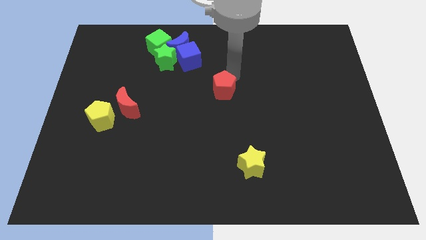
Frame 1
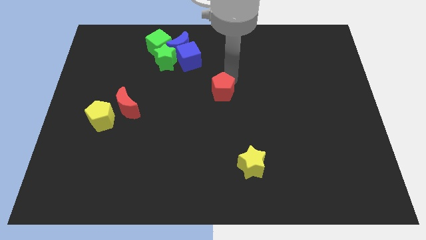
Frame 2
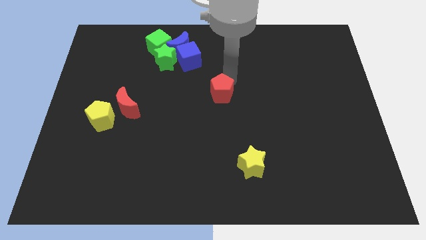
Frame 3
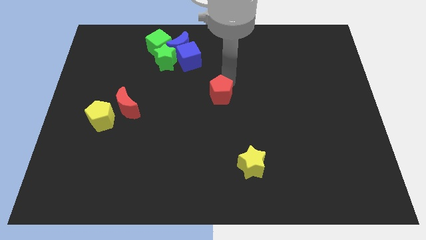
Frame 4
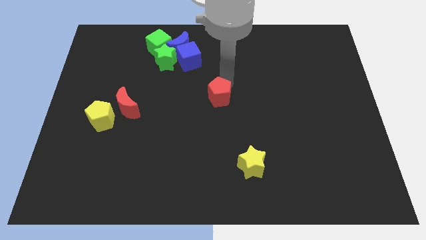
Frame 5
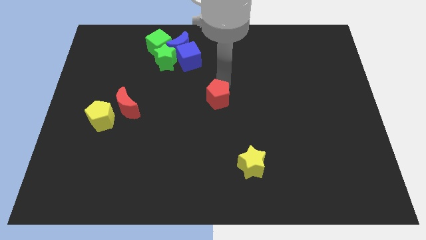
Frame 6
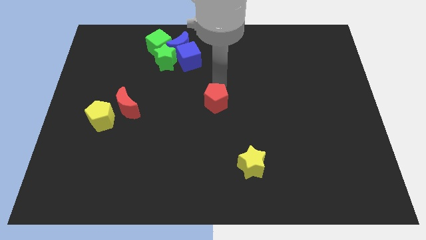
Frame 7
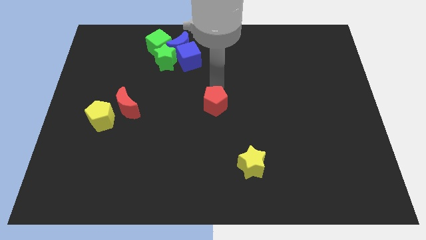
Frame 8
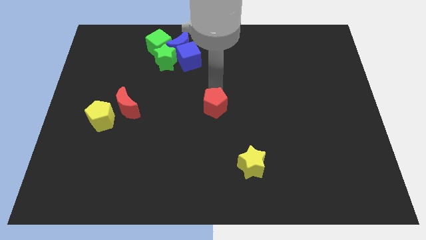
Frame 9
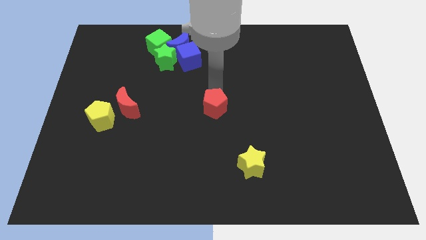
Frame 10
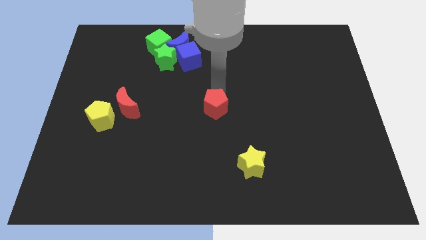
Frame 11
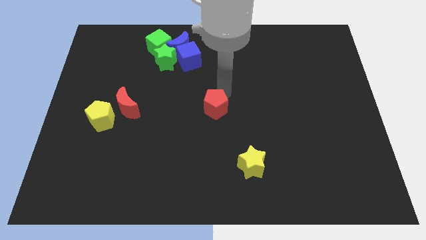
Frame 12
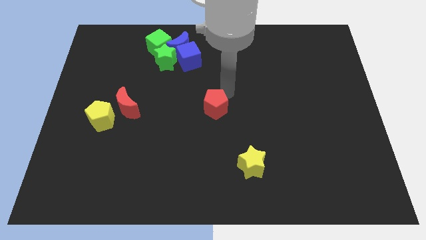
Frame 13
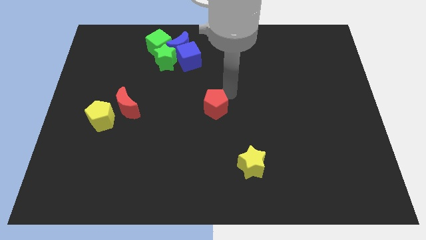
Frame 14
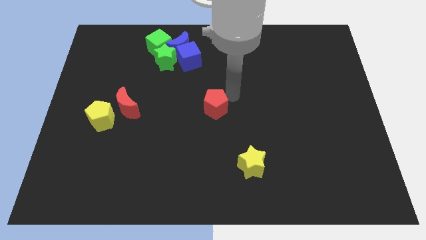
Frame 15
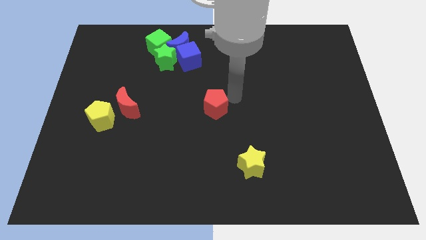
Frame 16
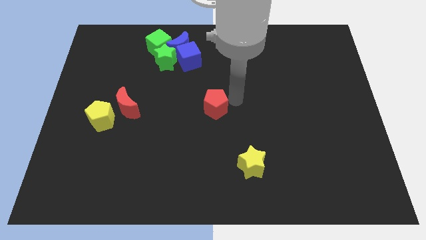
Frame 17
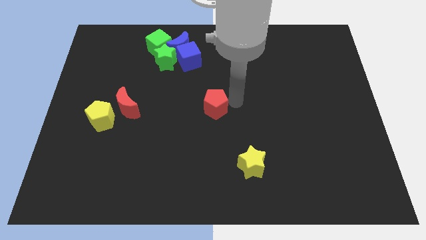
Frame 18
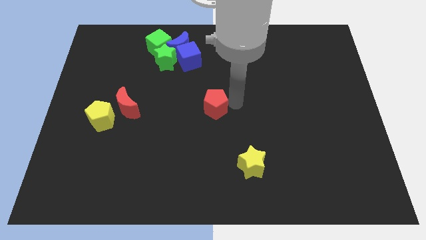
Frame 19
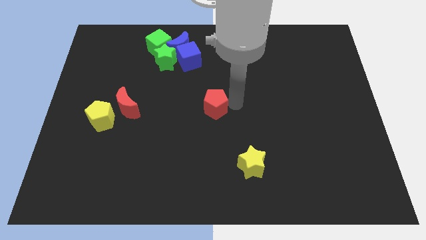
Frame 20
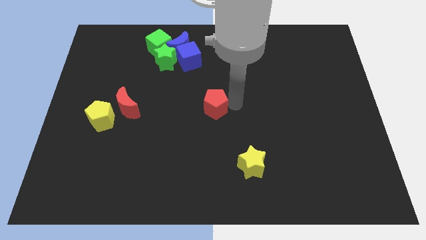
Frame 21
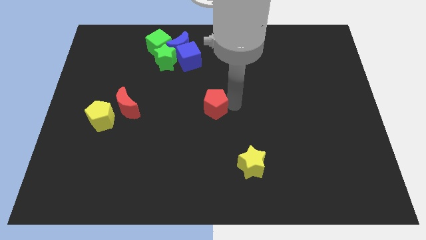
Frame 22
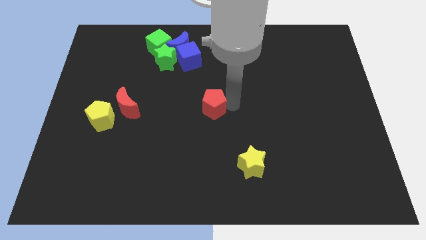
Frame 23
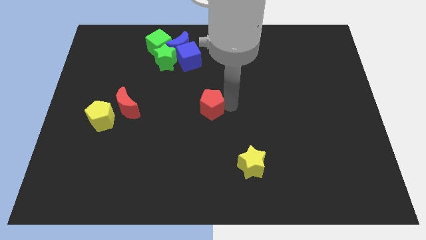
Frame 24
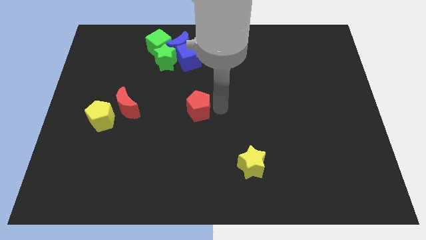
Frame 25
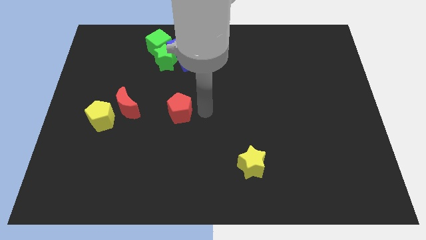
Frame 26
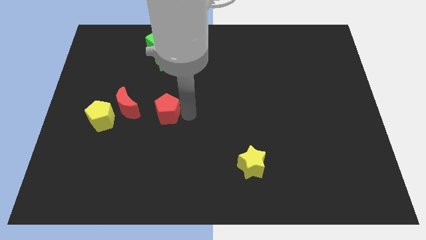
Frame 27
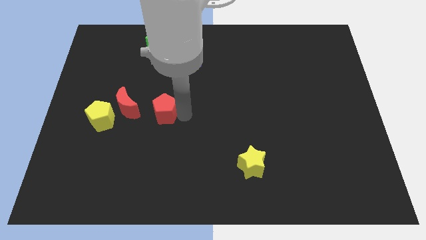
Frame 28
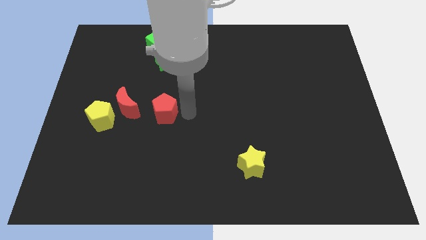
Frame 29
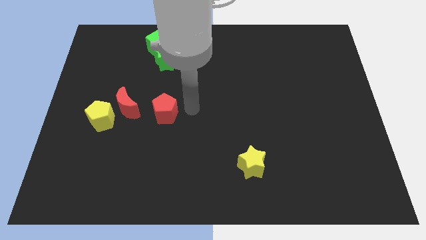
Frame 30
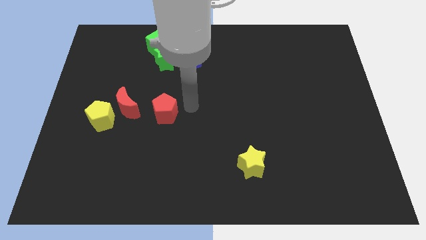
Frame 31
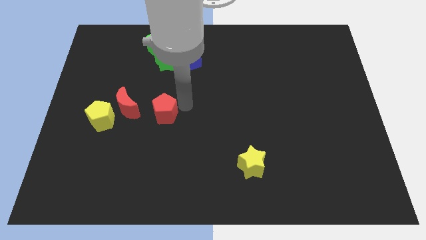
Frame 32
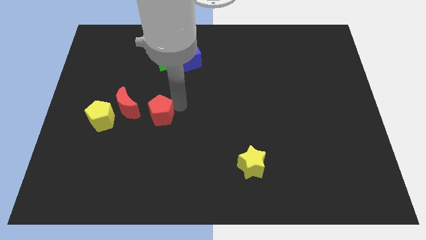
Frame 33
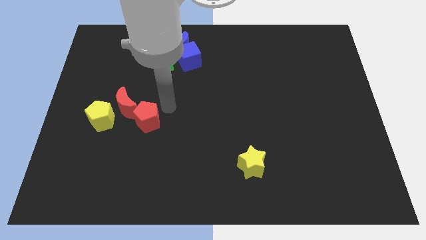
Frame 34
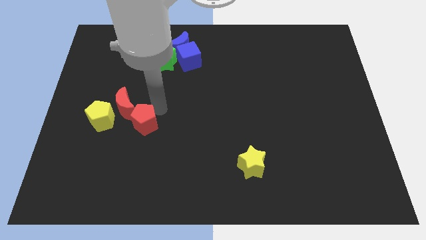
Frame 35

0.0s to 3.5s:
push the red pentagon towards the right of yellow pentagon

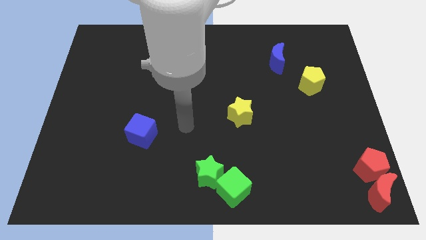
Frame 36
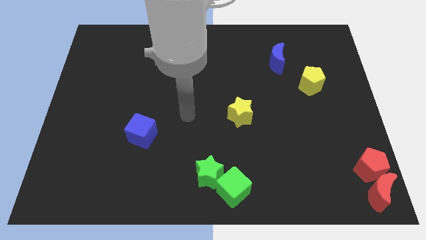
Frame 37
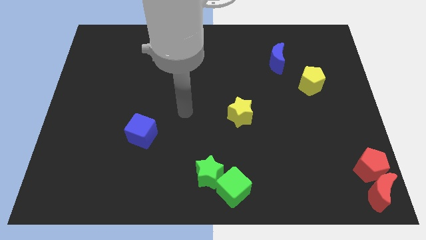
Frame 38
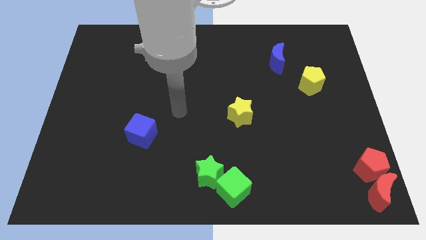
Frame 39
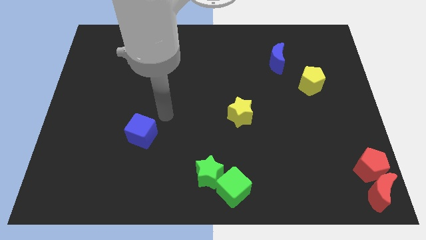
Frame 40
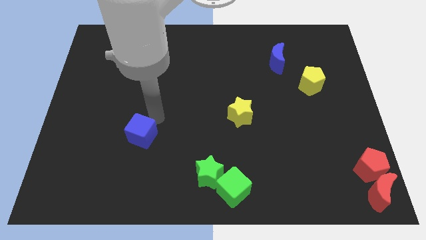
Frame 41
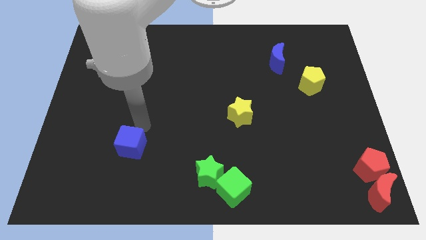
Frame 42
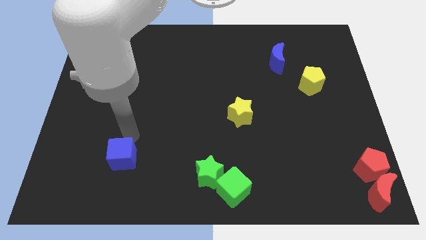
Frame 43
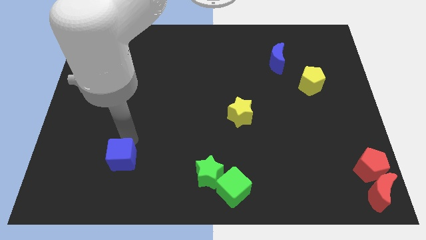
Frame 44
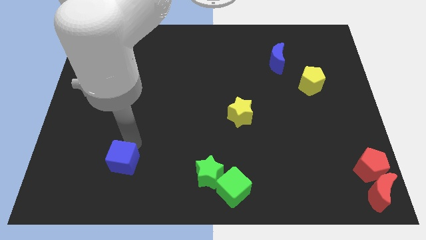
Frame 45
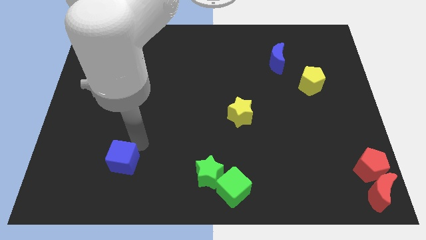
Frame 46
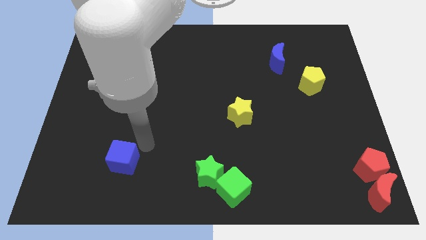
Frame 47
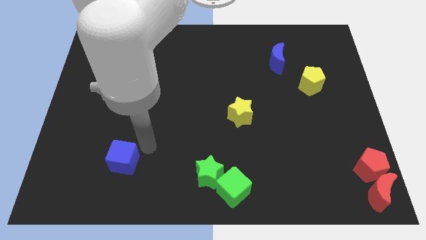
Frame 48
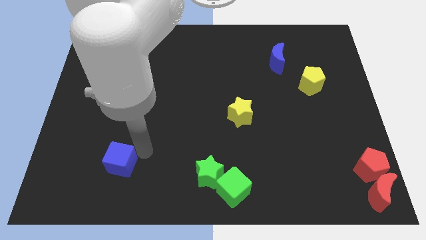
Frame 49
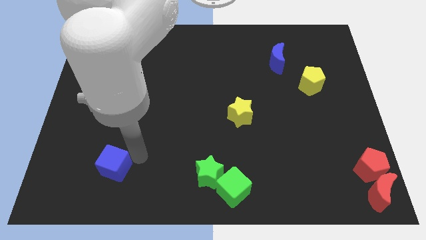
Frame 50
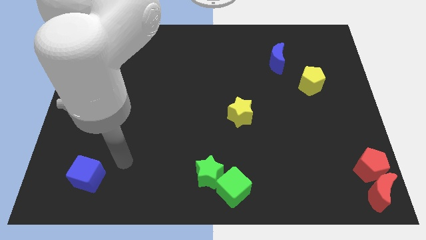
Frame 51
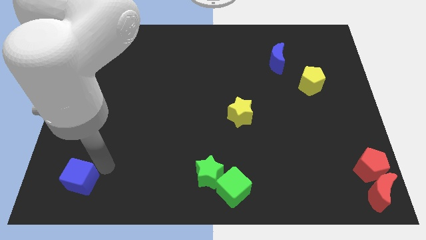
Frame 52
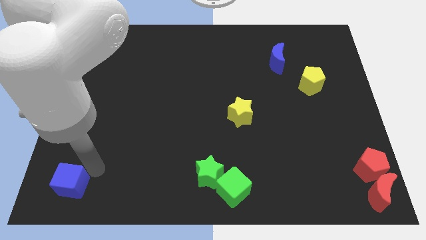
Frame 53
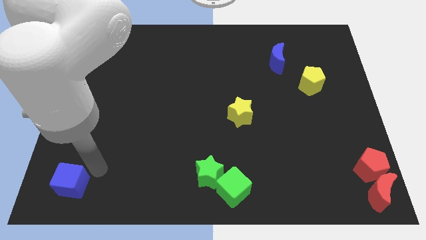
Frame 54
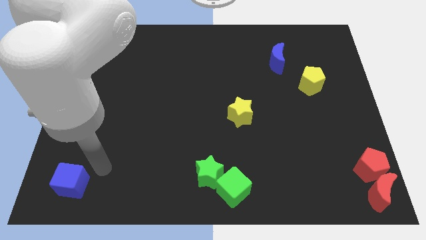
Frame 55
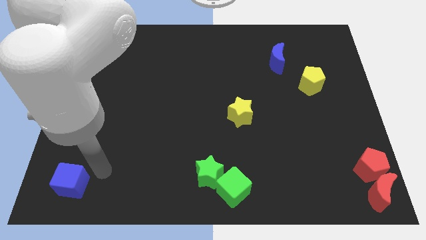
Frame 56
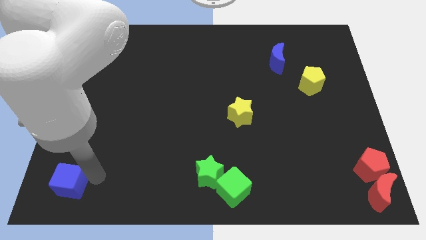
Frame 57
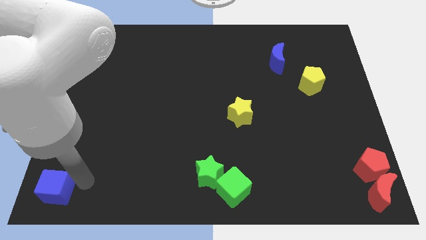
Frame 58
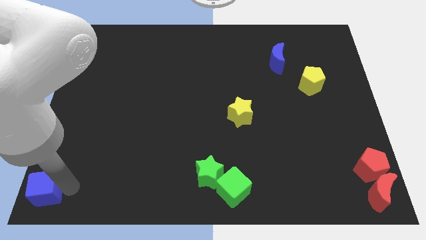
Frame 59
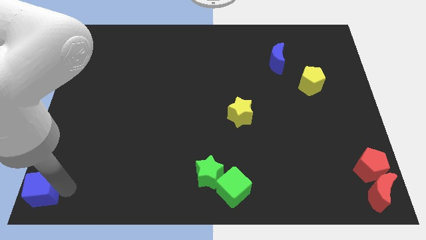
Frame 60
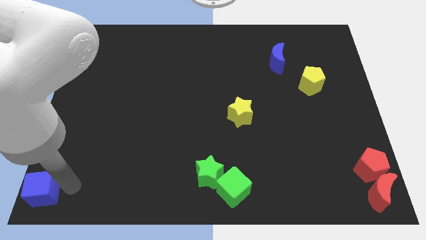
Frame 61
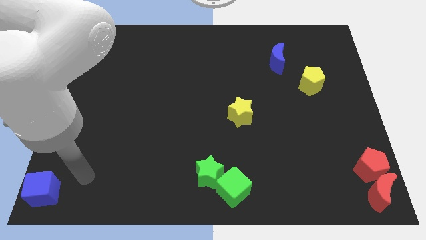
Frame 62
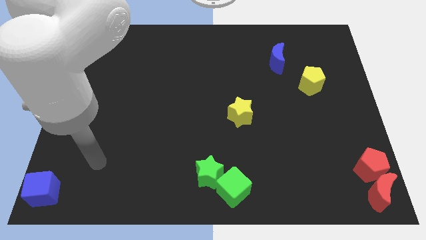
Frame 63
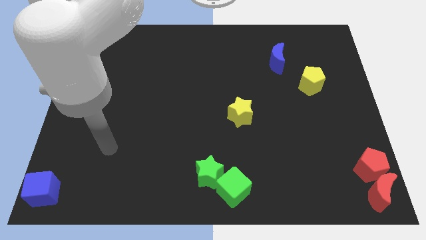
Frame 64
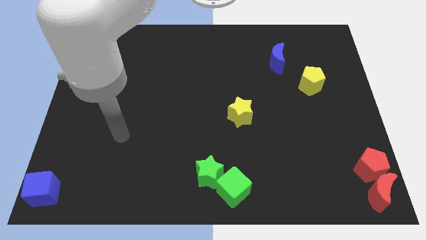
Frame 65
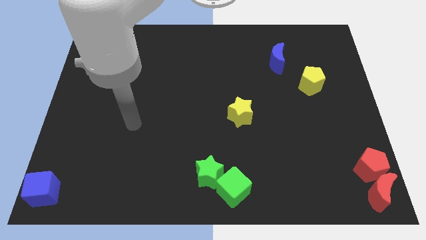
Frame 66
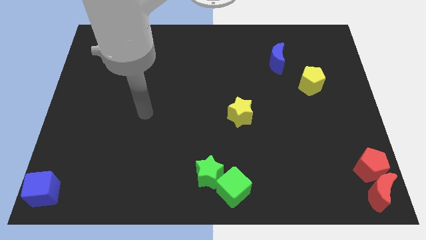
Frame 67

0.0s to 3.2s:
move the blue cube to the bottom left

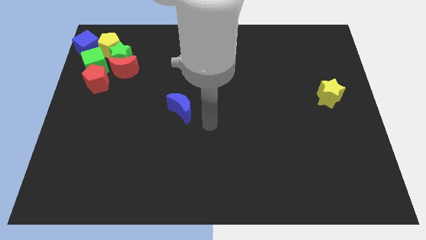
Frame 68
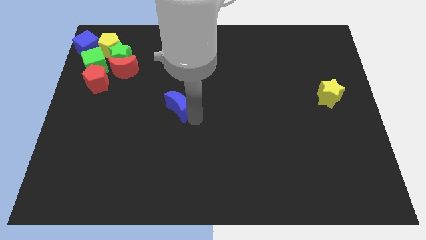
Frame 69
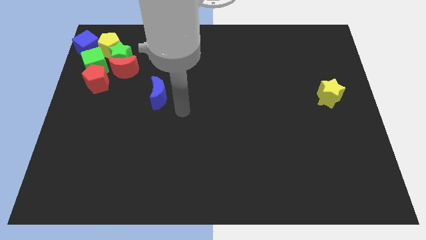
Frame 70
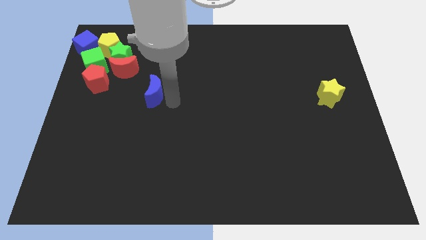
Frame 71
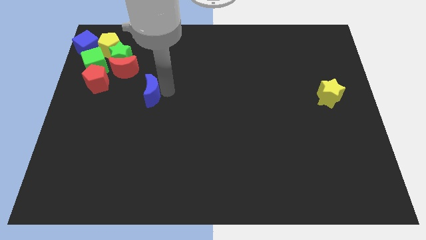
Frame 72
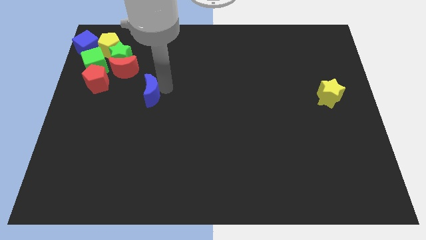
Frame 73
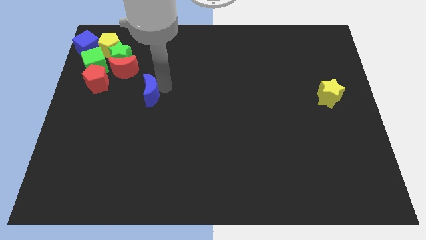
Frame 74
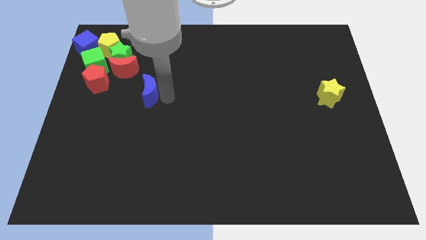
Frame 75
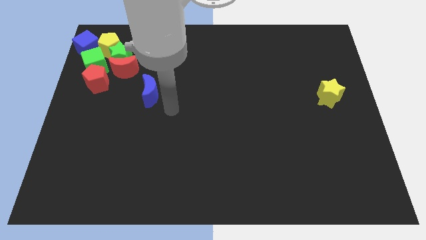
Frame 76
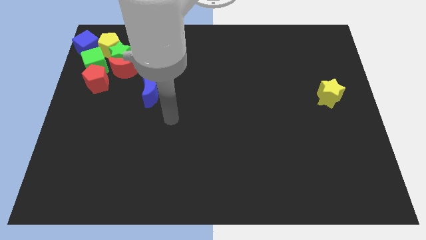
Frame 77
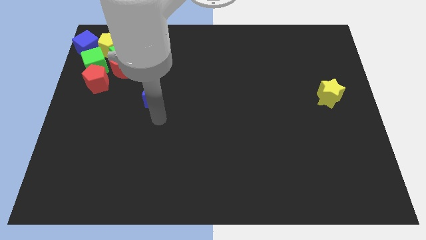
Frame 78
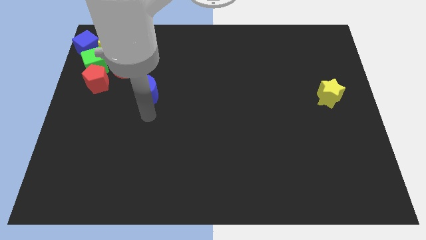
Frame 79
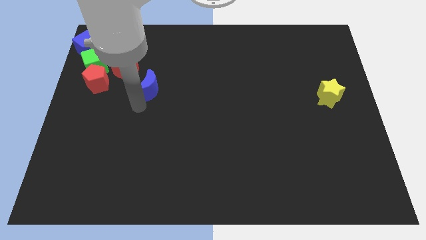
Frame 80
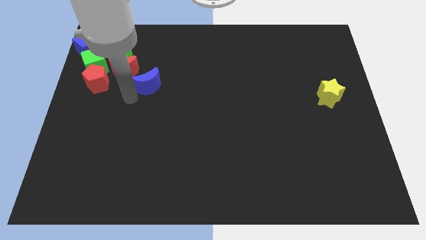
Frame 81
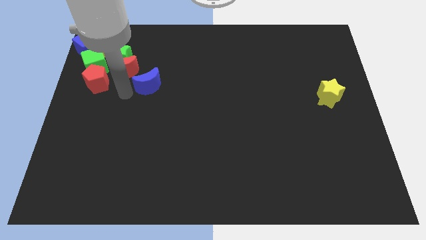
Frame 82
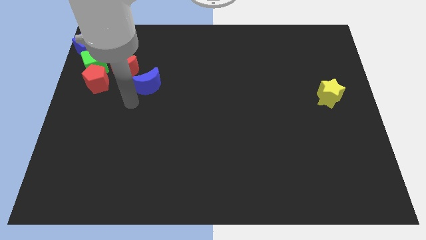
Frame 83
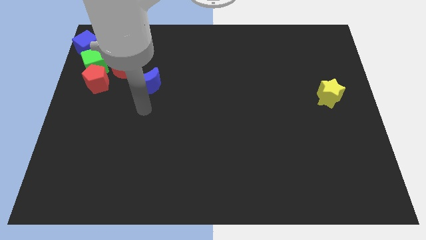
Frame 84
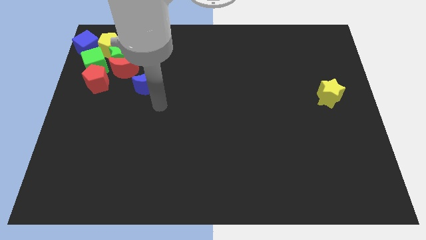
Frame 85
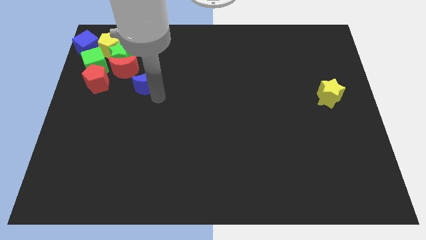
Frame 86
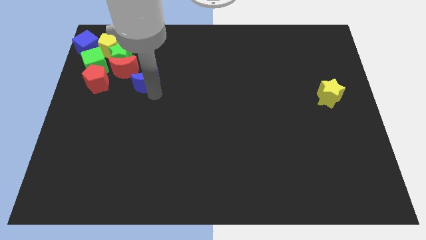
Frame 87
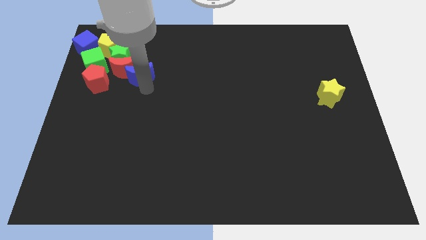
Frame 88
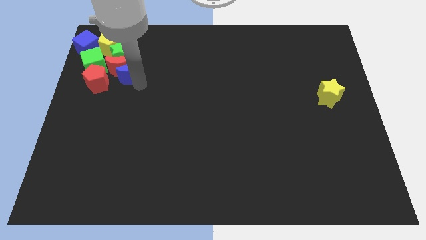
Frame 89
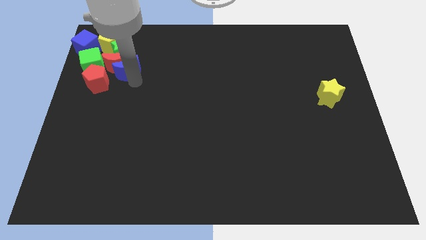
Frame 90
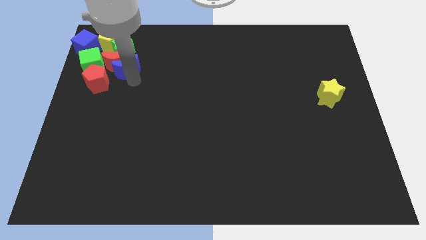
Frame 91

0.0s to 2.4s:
push the blue moon into the group of blocks
